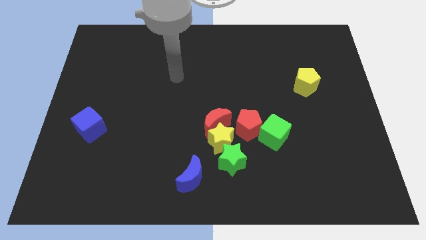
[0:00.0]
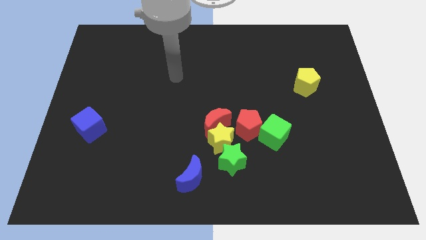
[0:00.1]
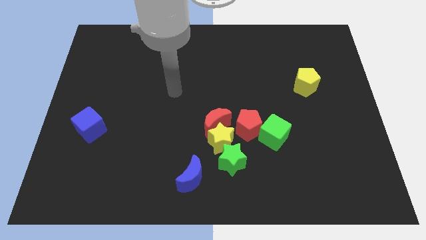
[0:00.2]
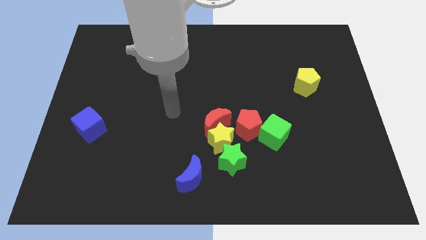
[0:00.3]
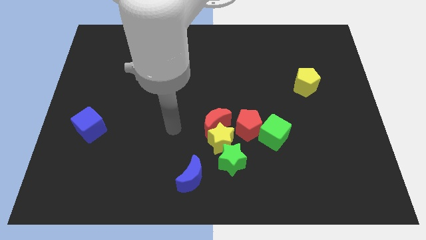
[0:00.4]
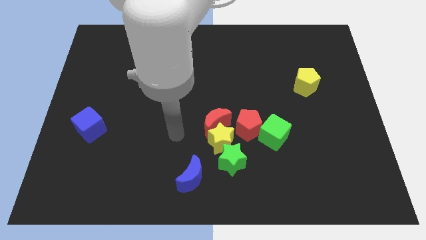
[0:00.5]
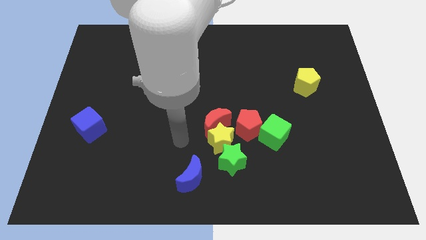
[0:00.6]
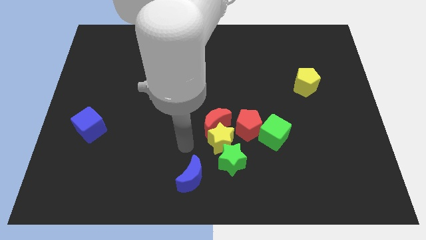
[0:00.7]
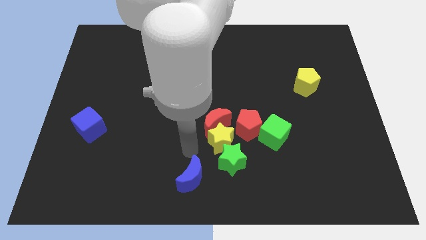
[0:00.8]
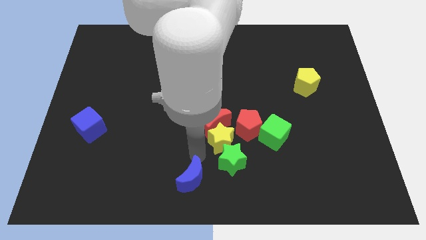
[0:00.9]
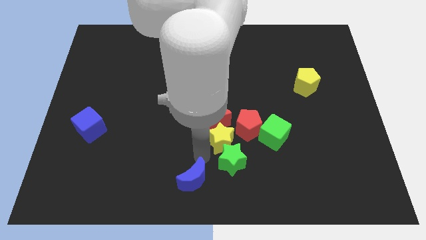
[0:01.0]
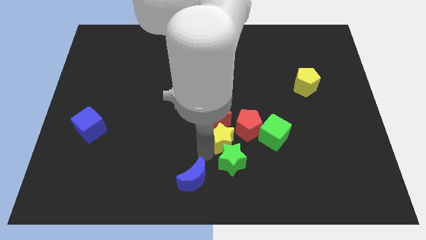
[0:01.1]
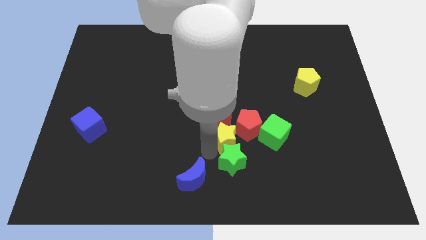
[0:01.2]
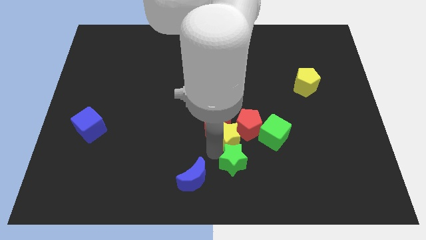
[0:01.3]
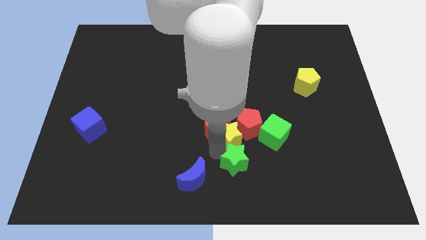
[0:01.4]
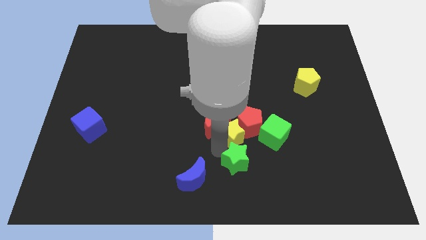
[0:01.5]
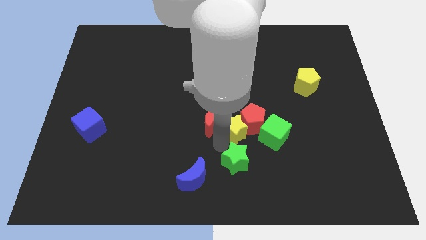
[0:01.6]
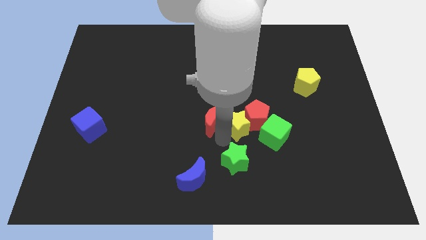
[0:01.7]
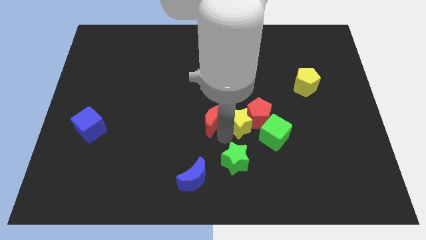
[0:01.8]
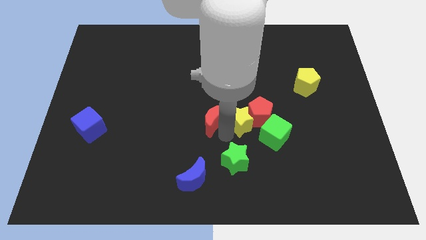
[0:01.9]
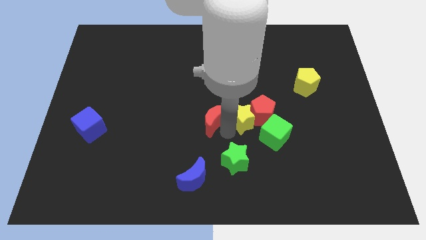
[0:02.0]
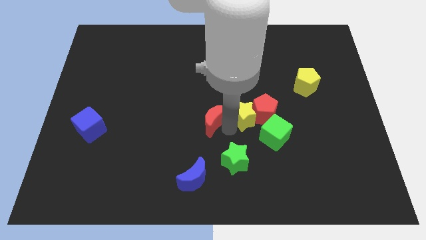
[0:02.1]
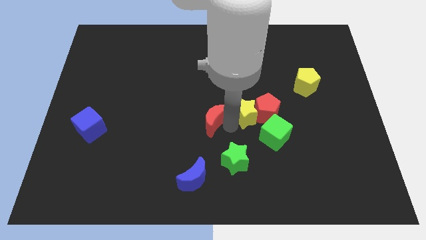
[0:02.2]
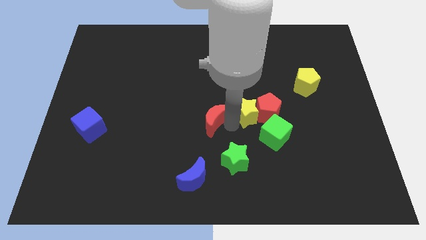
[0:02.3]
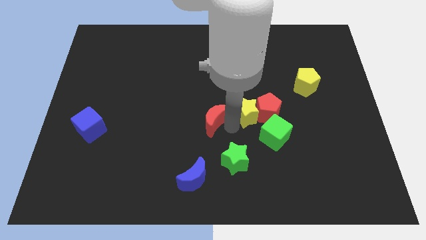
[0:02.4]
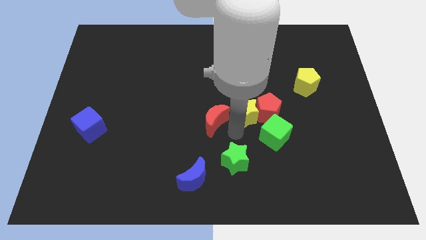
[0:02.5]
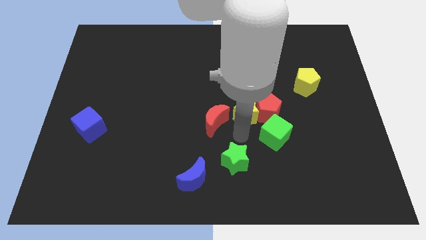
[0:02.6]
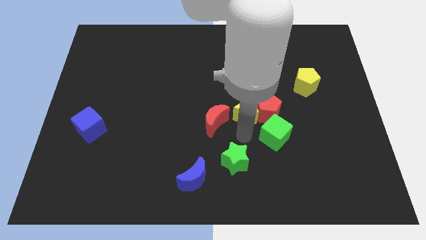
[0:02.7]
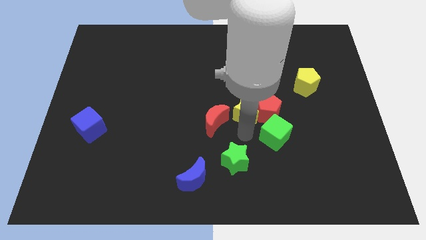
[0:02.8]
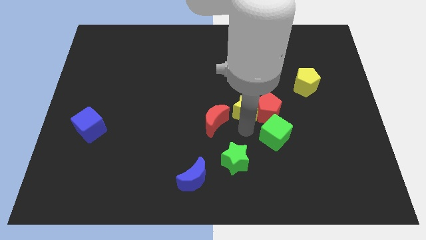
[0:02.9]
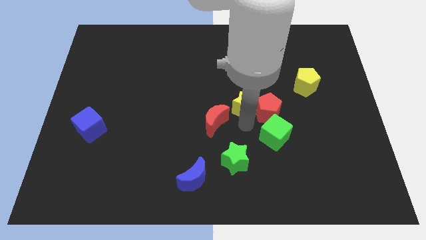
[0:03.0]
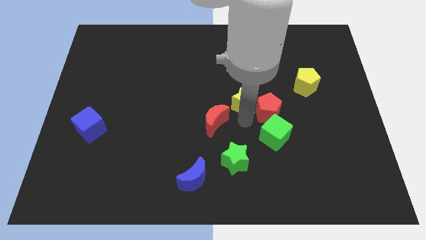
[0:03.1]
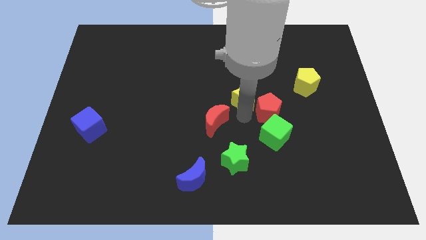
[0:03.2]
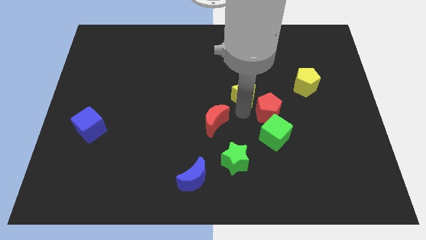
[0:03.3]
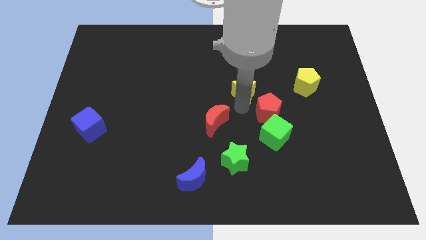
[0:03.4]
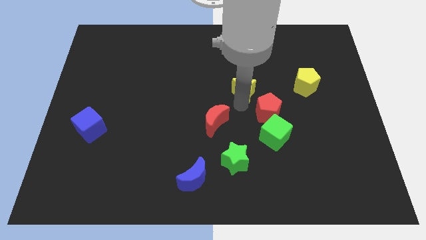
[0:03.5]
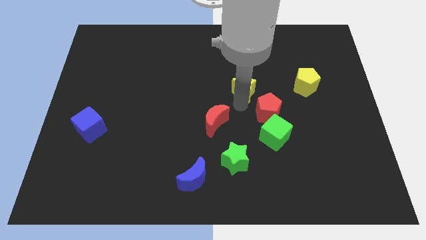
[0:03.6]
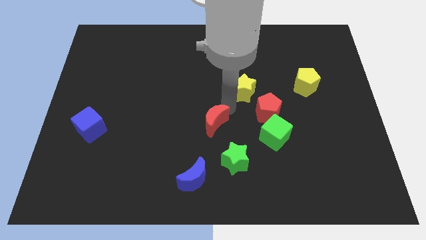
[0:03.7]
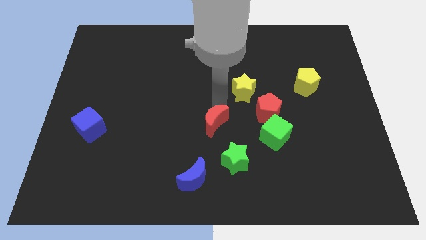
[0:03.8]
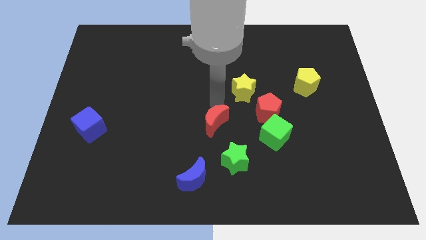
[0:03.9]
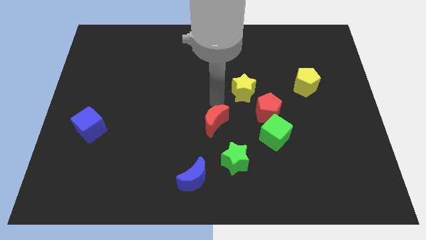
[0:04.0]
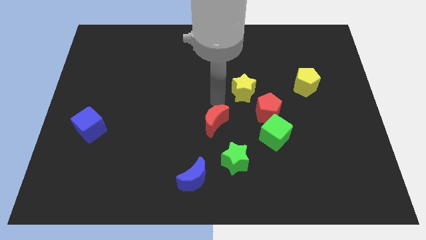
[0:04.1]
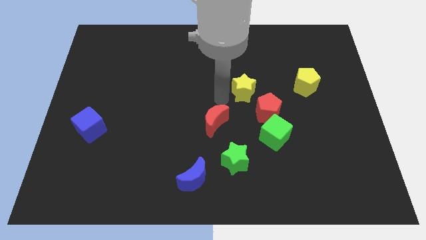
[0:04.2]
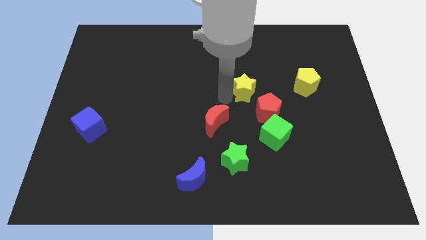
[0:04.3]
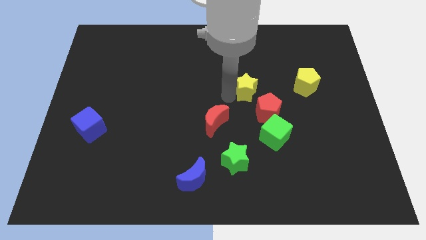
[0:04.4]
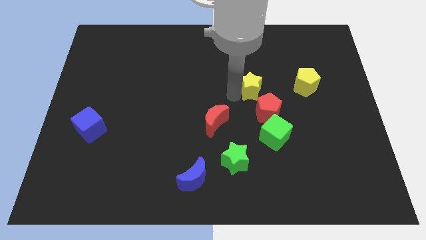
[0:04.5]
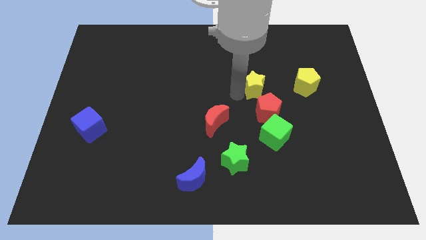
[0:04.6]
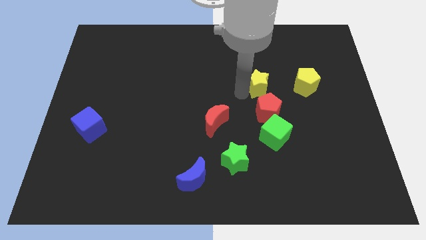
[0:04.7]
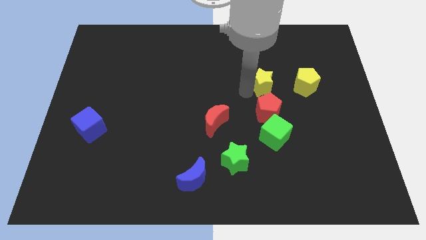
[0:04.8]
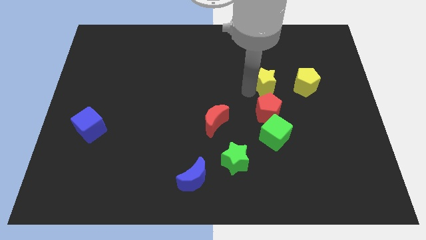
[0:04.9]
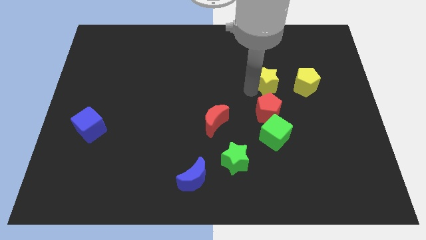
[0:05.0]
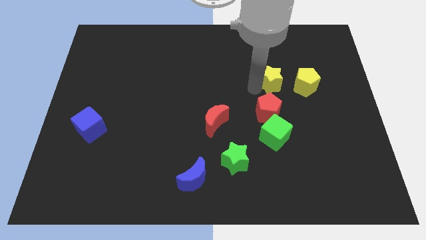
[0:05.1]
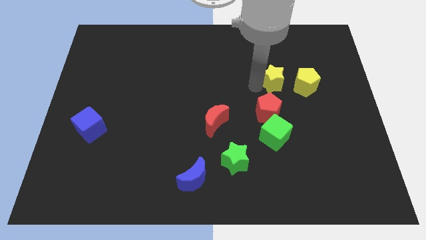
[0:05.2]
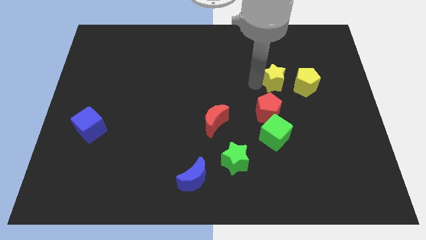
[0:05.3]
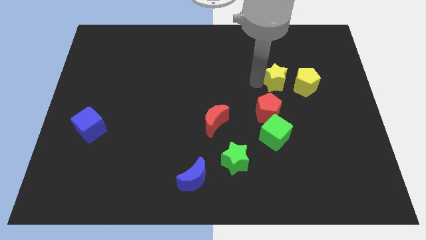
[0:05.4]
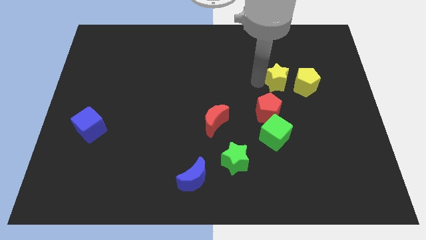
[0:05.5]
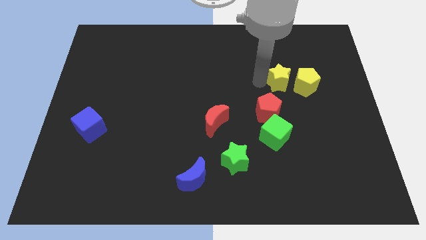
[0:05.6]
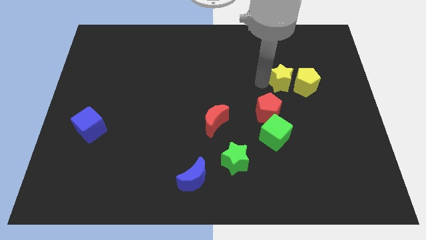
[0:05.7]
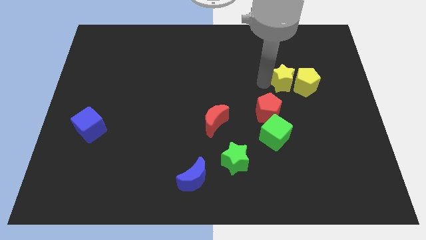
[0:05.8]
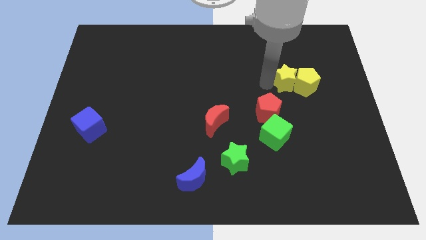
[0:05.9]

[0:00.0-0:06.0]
put the yellow star towards the yellow pentagon

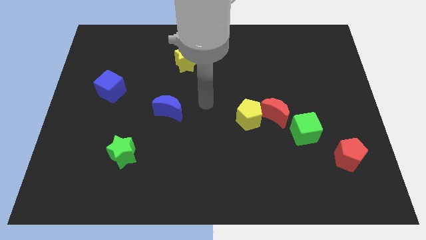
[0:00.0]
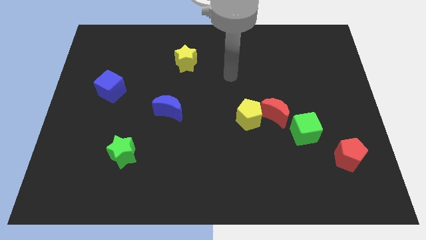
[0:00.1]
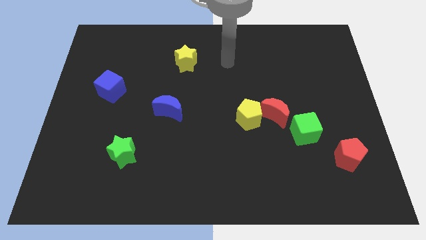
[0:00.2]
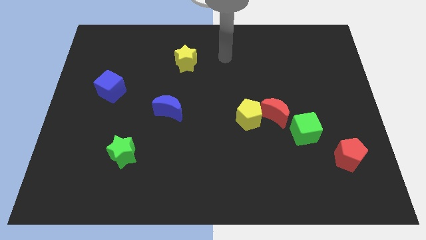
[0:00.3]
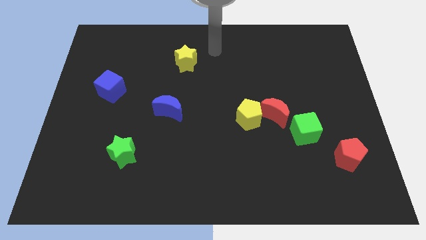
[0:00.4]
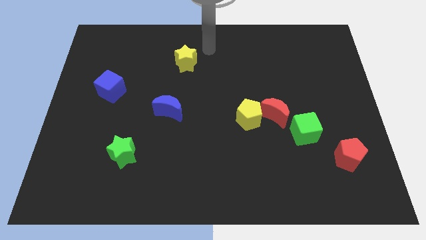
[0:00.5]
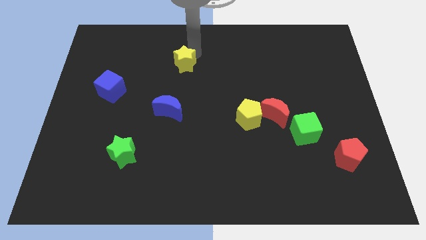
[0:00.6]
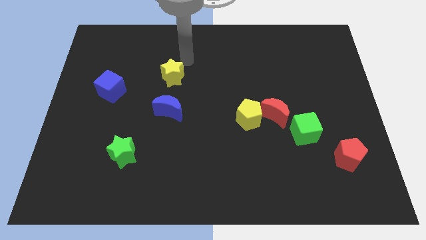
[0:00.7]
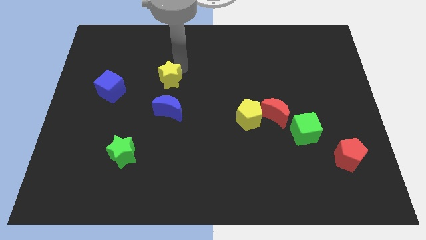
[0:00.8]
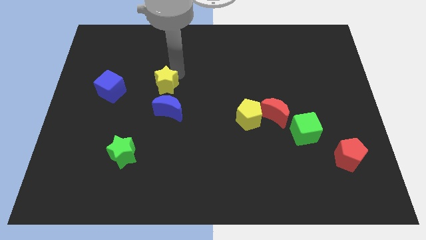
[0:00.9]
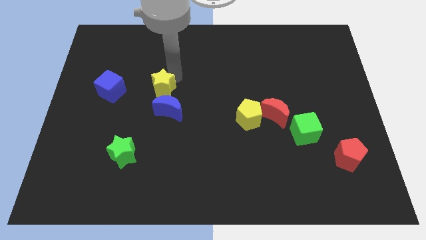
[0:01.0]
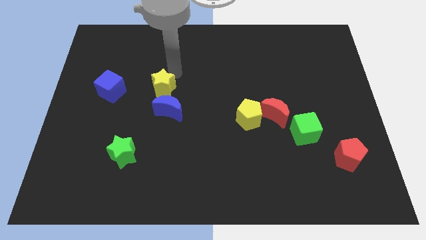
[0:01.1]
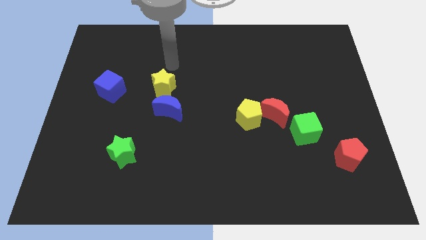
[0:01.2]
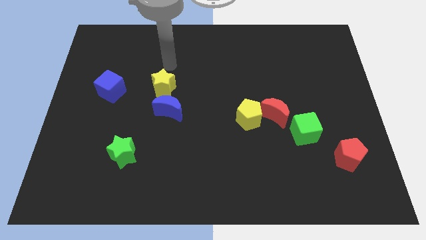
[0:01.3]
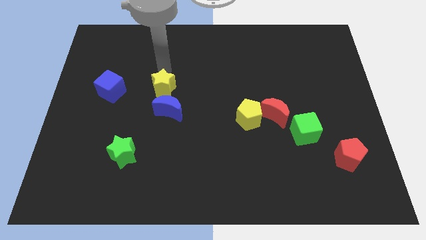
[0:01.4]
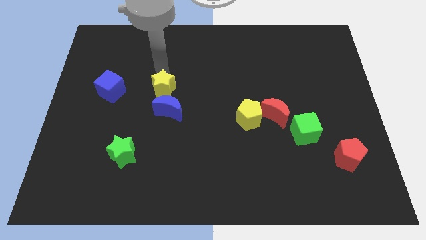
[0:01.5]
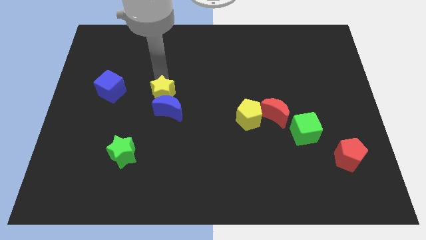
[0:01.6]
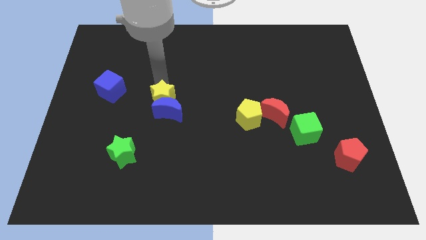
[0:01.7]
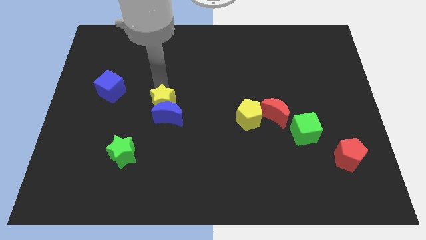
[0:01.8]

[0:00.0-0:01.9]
move the yellow star to the blue moon

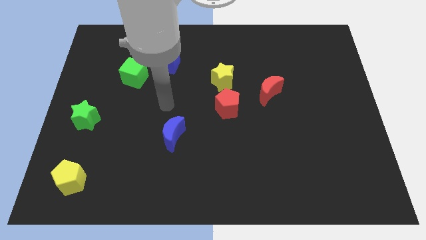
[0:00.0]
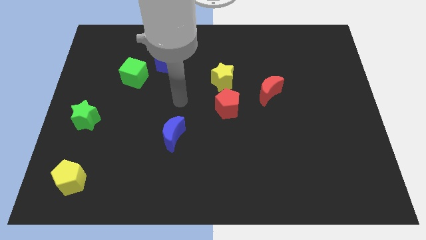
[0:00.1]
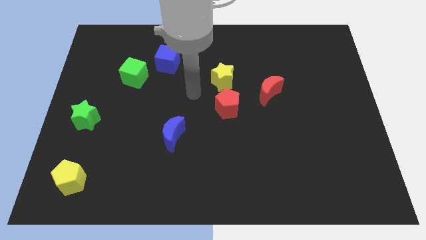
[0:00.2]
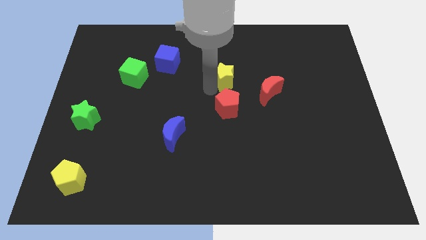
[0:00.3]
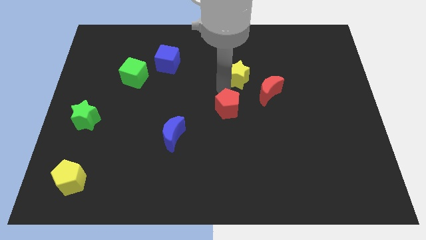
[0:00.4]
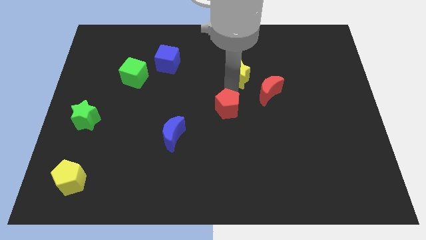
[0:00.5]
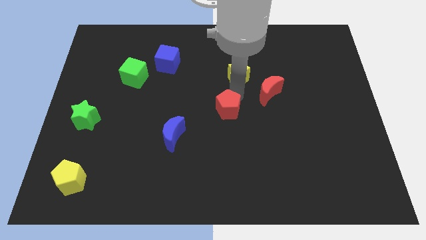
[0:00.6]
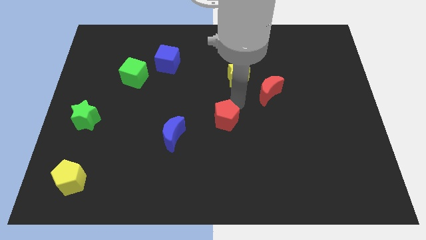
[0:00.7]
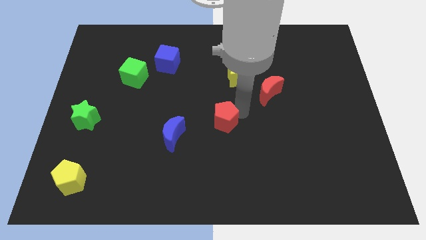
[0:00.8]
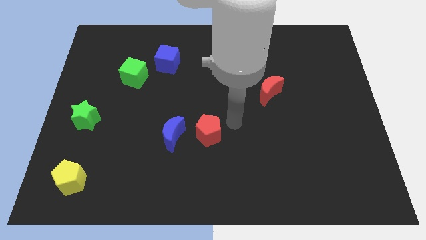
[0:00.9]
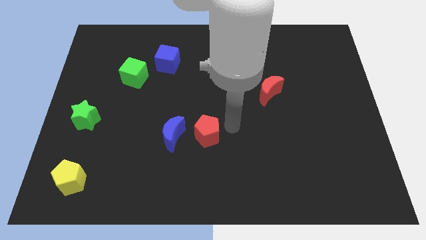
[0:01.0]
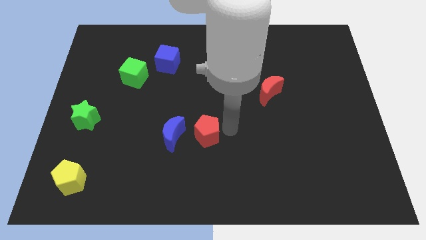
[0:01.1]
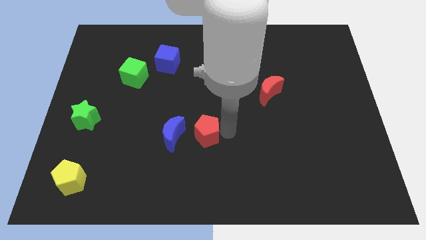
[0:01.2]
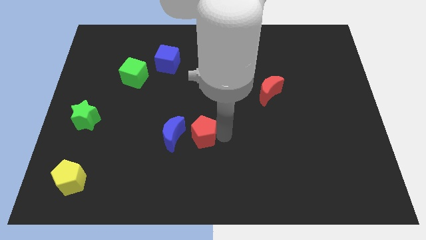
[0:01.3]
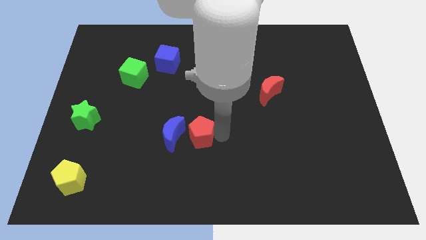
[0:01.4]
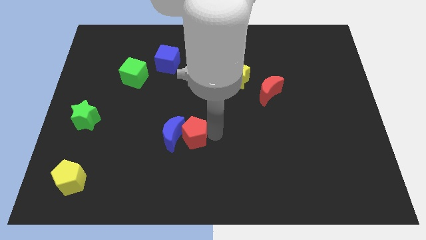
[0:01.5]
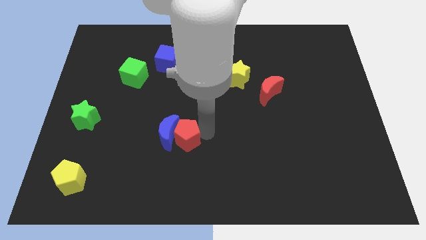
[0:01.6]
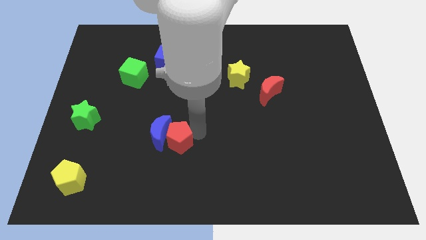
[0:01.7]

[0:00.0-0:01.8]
move the red pentagon towards the blue moon
